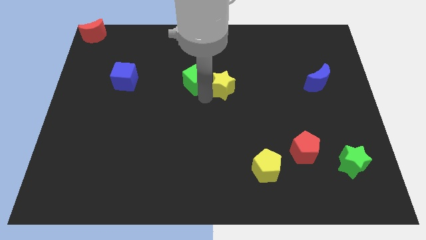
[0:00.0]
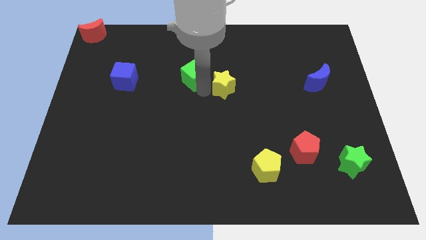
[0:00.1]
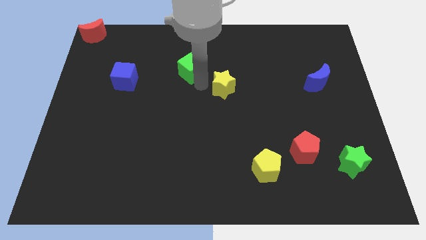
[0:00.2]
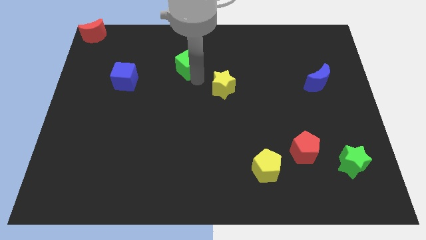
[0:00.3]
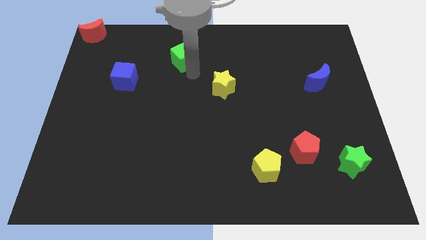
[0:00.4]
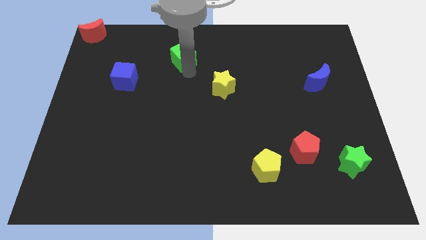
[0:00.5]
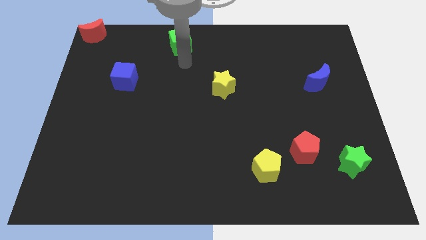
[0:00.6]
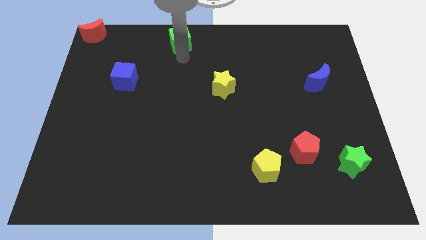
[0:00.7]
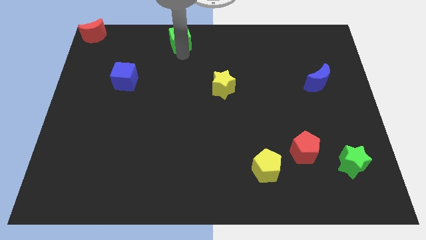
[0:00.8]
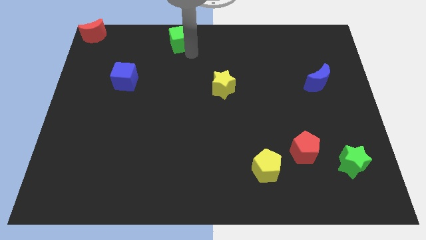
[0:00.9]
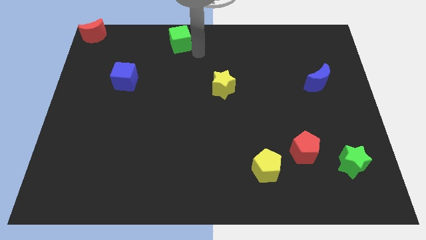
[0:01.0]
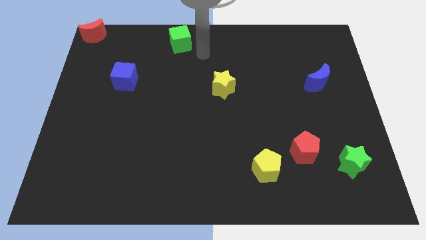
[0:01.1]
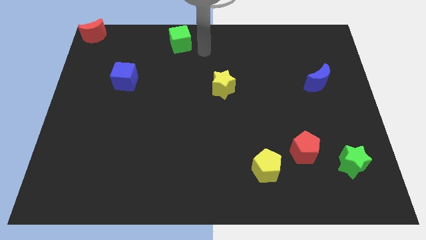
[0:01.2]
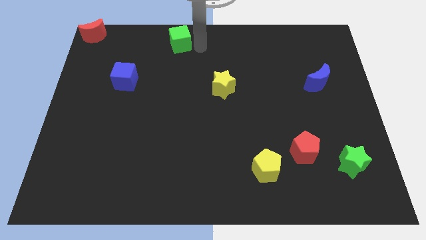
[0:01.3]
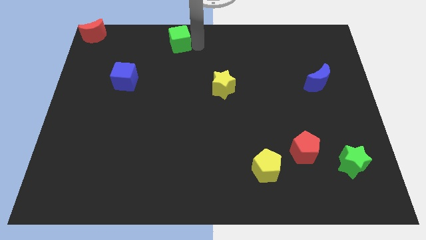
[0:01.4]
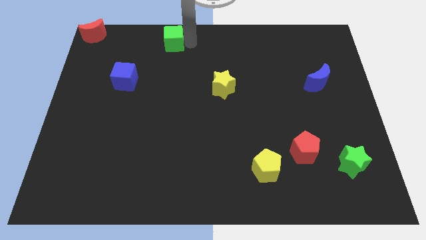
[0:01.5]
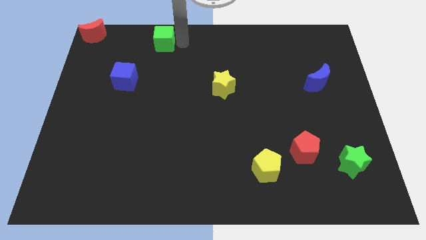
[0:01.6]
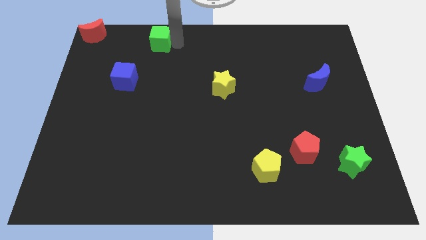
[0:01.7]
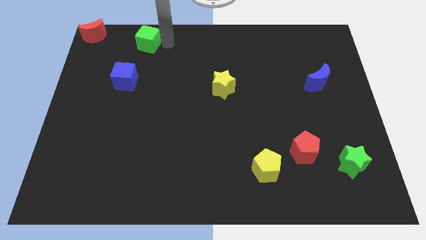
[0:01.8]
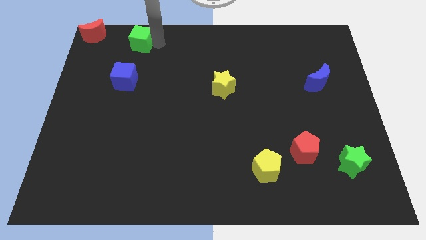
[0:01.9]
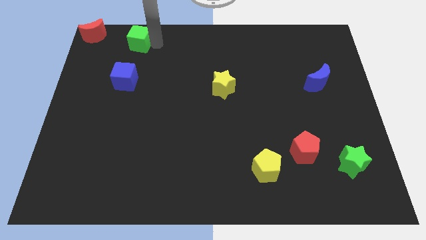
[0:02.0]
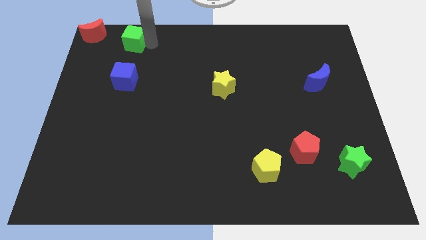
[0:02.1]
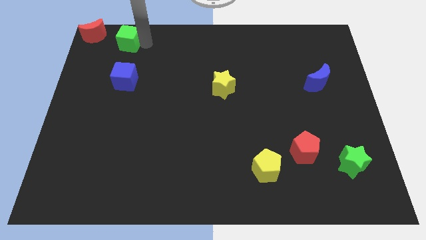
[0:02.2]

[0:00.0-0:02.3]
place the green cube vertically above the blue cube

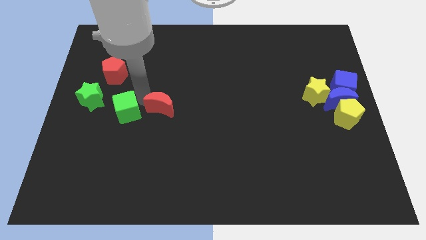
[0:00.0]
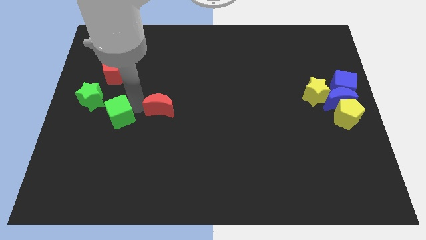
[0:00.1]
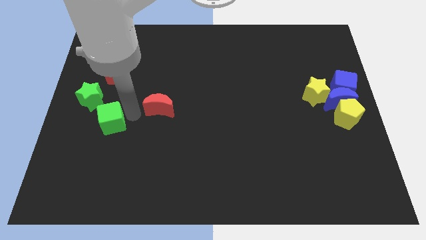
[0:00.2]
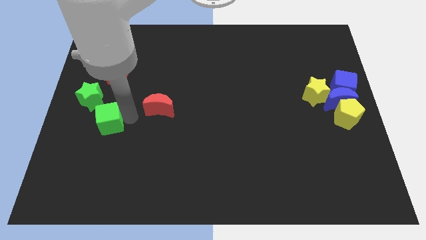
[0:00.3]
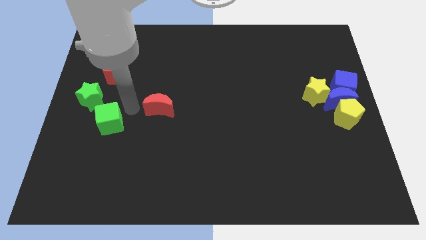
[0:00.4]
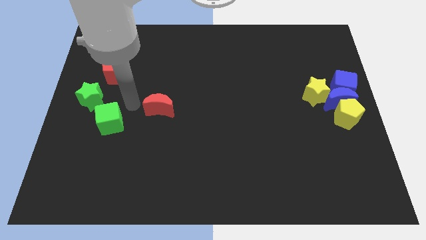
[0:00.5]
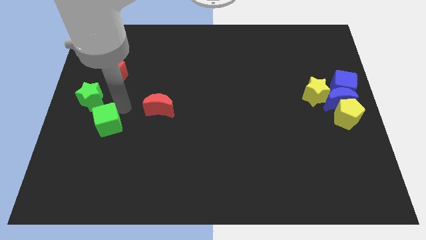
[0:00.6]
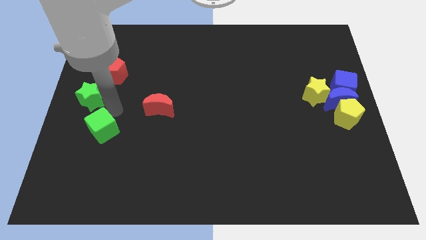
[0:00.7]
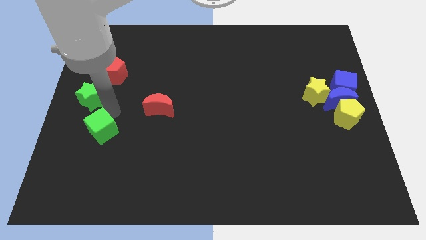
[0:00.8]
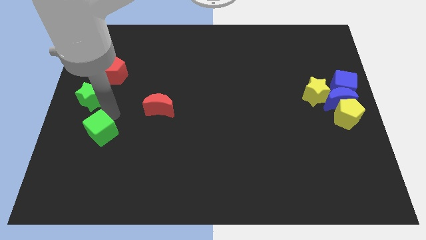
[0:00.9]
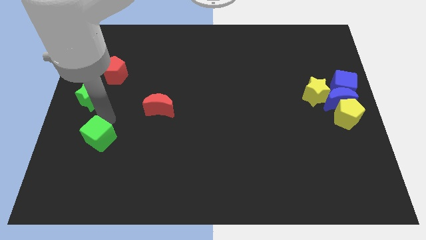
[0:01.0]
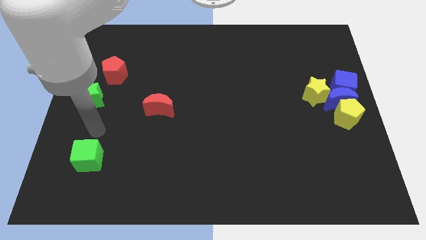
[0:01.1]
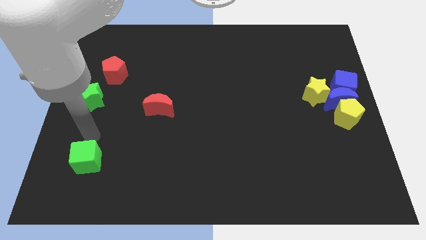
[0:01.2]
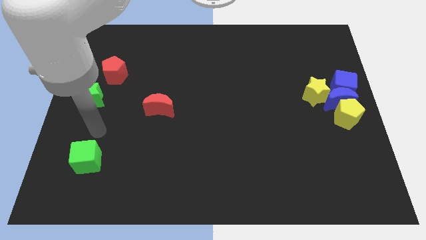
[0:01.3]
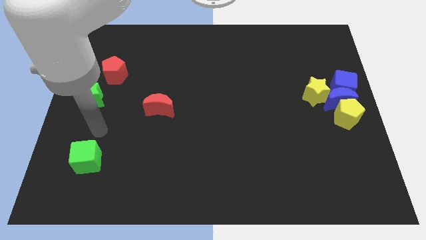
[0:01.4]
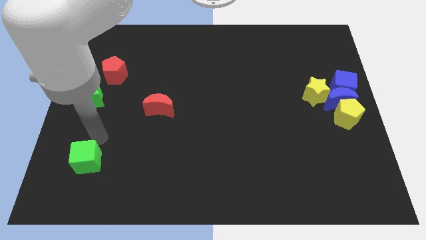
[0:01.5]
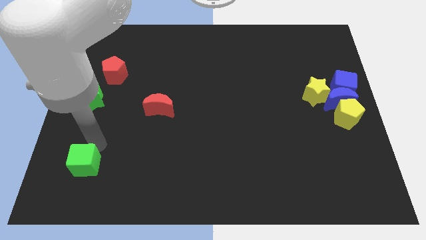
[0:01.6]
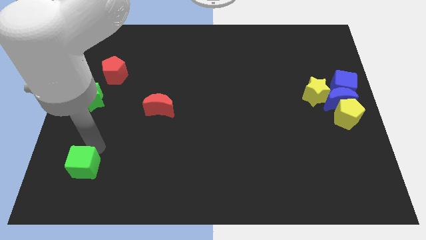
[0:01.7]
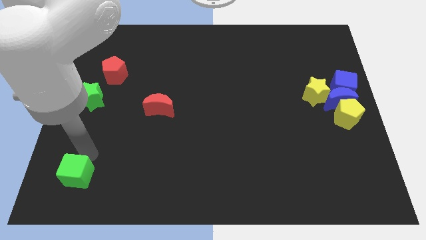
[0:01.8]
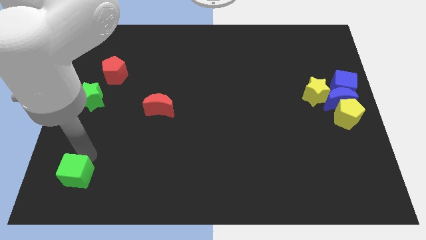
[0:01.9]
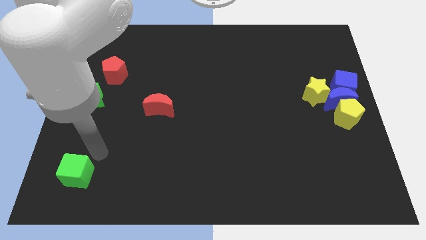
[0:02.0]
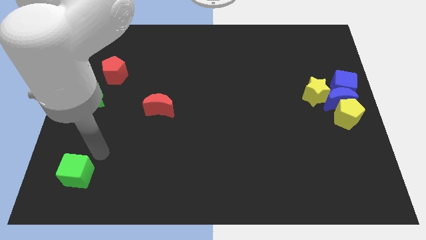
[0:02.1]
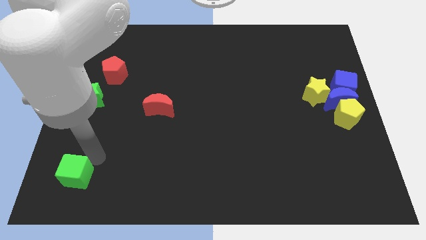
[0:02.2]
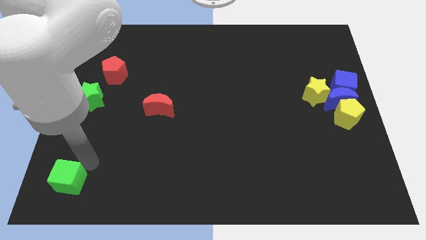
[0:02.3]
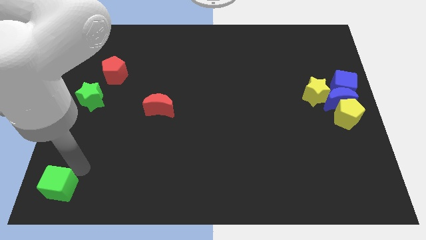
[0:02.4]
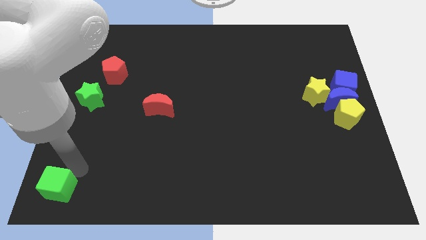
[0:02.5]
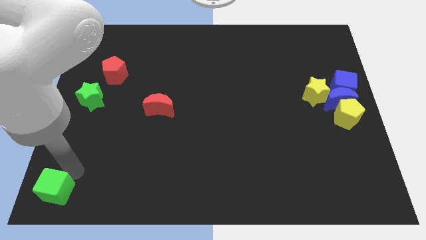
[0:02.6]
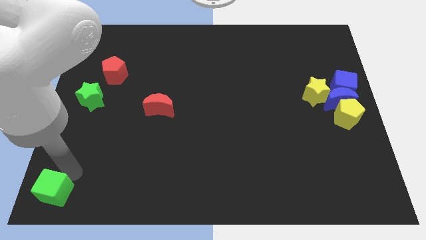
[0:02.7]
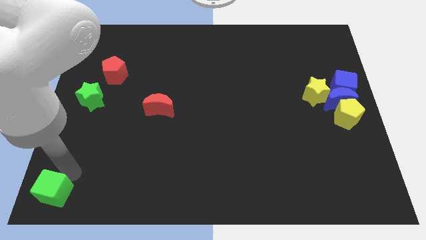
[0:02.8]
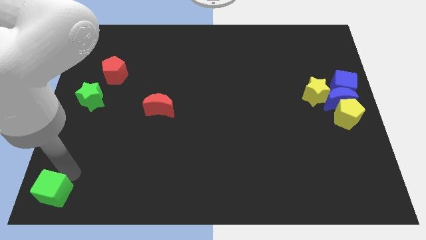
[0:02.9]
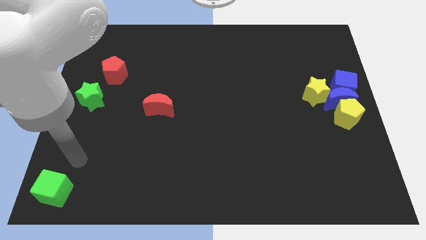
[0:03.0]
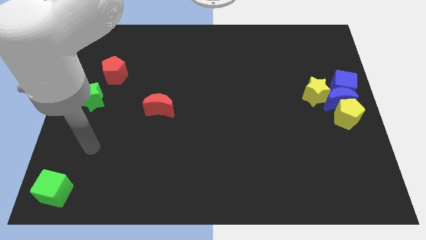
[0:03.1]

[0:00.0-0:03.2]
place green cube towards bottom left corner

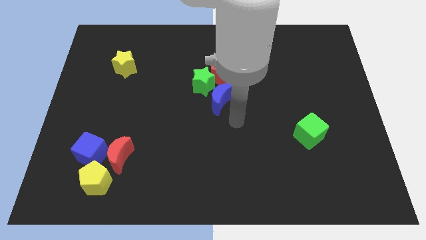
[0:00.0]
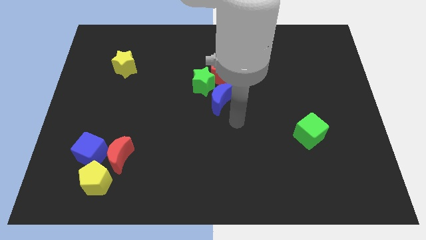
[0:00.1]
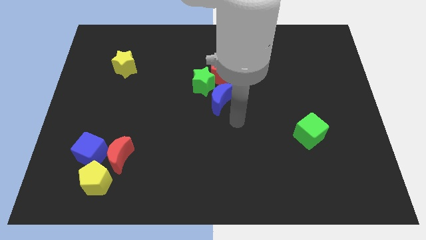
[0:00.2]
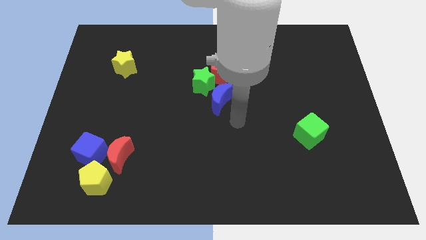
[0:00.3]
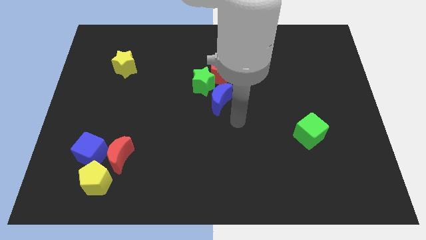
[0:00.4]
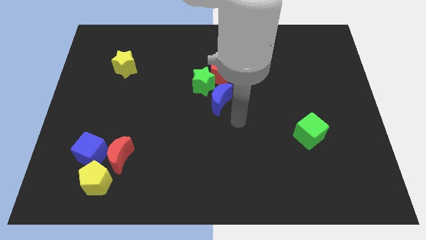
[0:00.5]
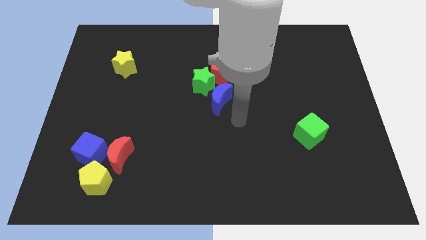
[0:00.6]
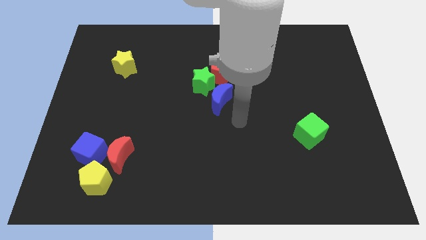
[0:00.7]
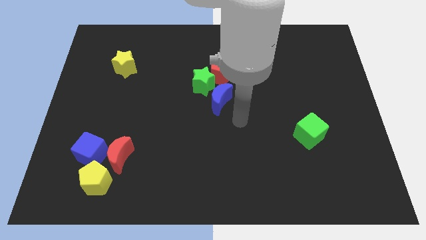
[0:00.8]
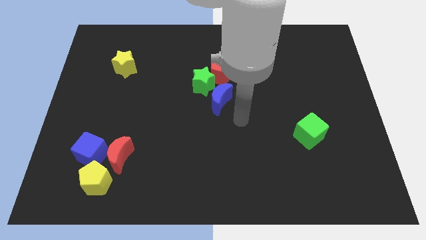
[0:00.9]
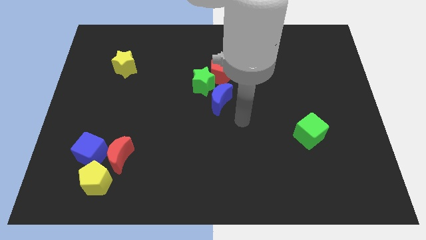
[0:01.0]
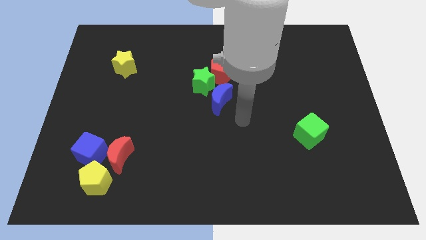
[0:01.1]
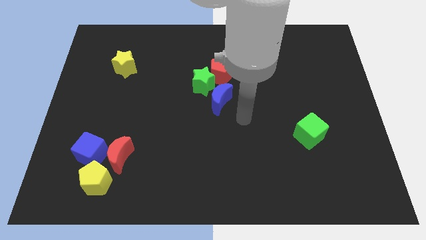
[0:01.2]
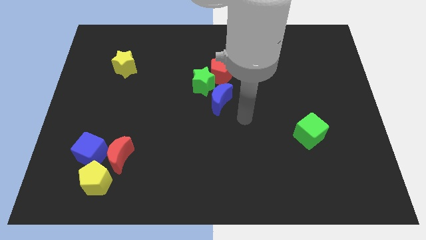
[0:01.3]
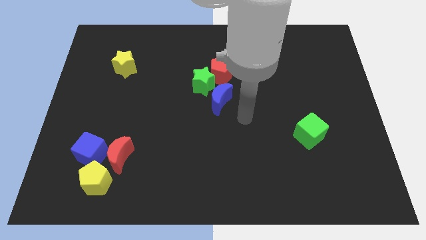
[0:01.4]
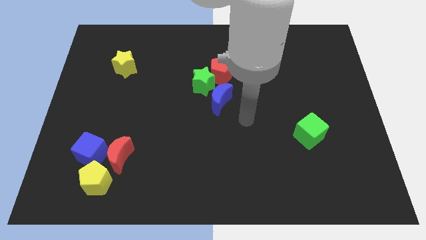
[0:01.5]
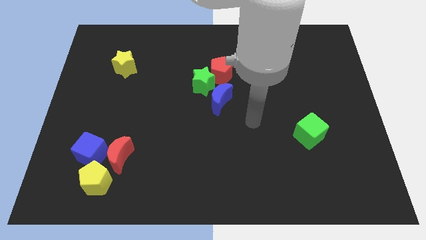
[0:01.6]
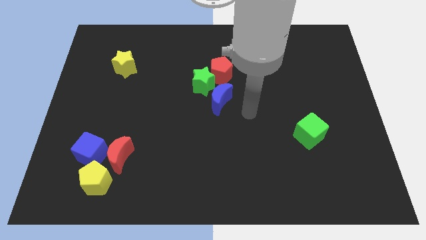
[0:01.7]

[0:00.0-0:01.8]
place your arm on the right side of blue moon

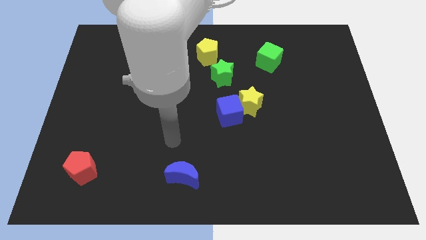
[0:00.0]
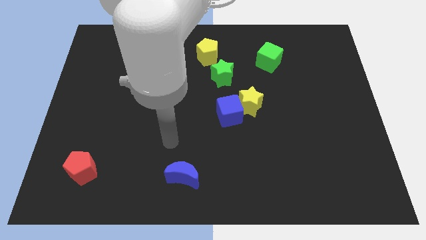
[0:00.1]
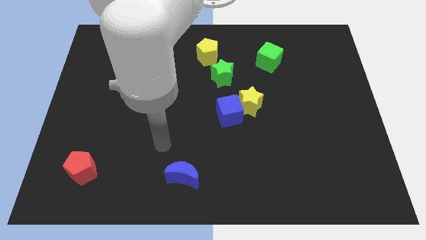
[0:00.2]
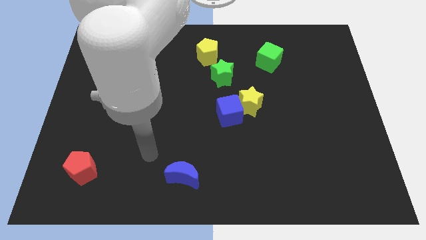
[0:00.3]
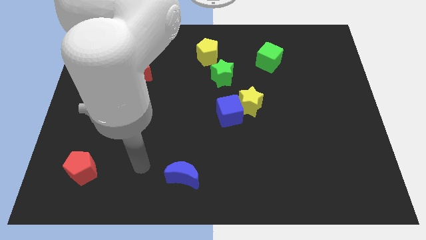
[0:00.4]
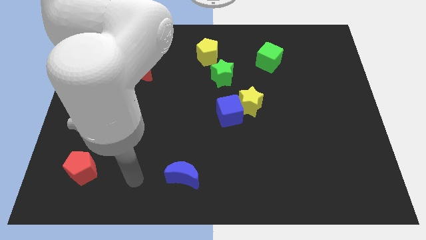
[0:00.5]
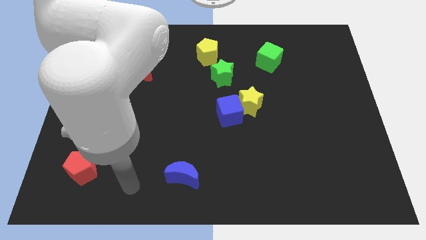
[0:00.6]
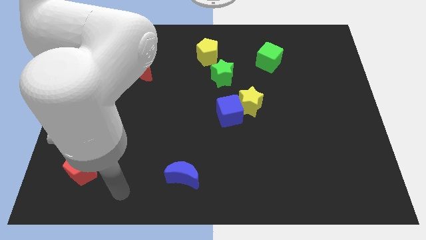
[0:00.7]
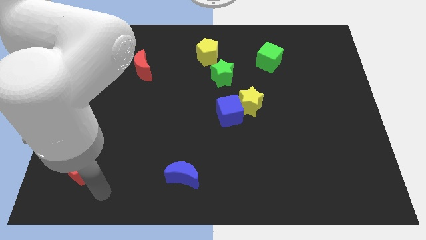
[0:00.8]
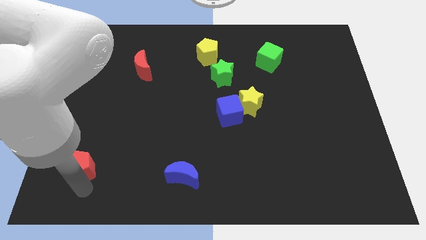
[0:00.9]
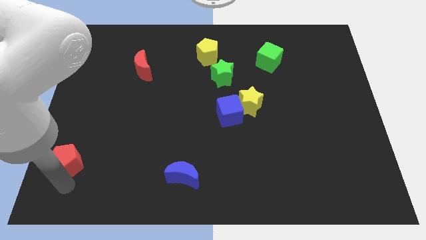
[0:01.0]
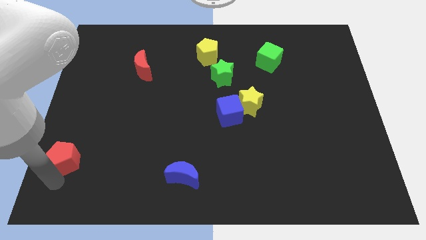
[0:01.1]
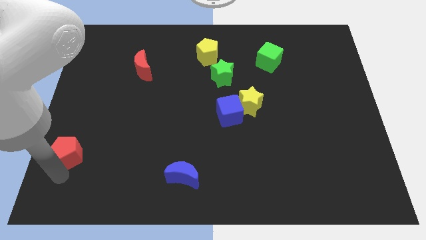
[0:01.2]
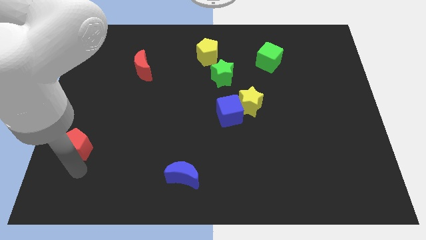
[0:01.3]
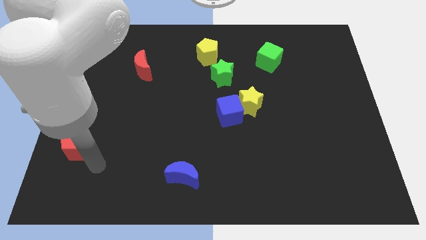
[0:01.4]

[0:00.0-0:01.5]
push the red pentagon up slightly
